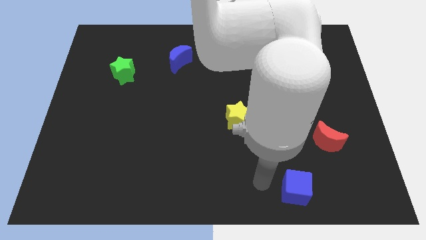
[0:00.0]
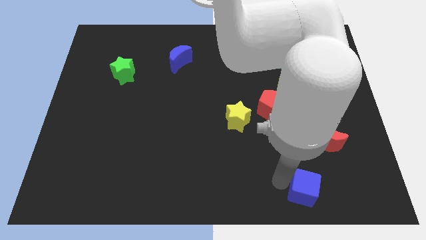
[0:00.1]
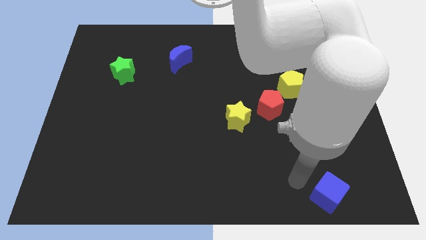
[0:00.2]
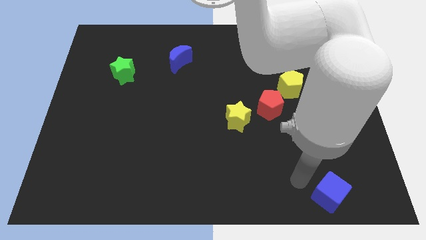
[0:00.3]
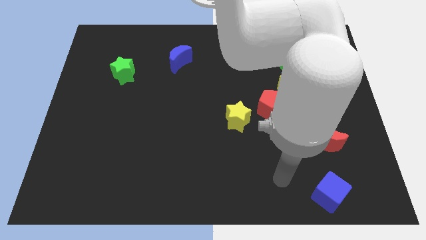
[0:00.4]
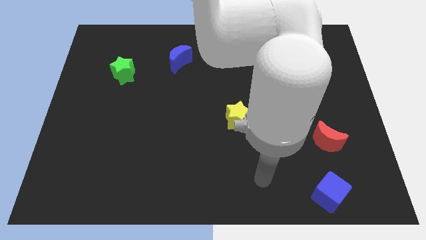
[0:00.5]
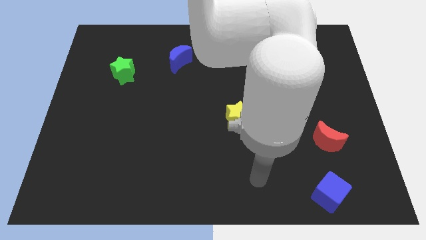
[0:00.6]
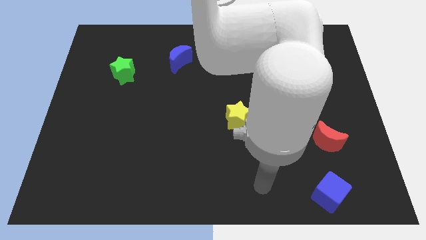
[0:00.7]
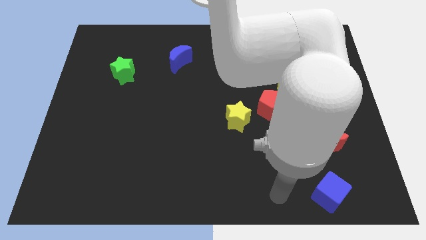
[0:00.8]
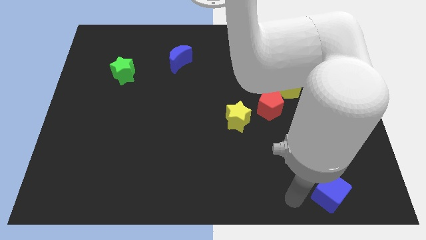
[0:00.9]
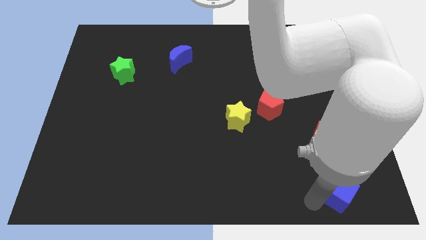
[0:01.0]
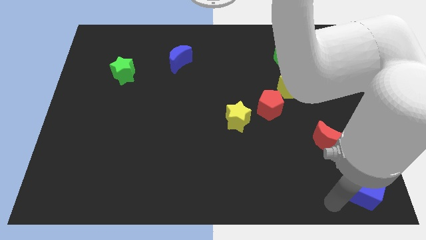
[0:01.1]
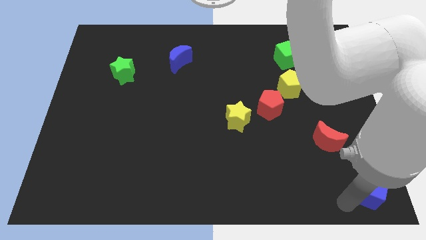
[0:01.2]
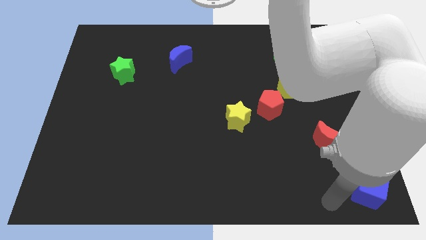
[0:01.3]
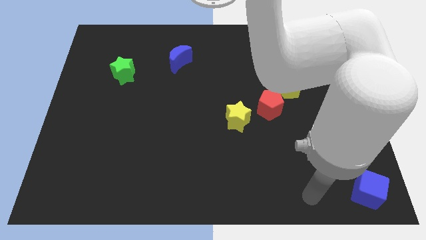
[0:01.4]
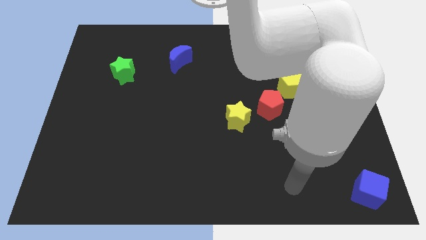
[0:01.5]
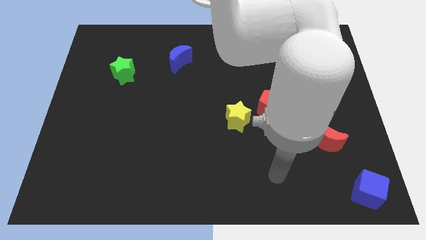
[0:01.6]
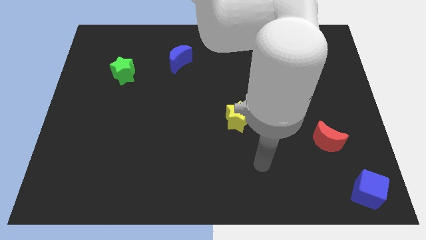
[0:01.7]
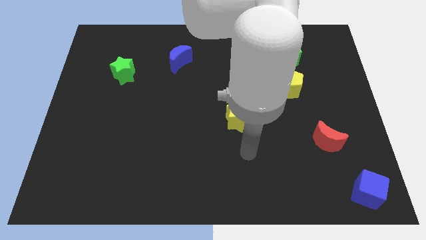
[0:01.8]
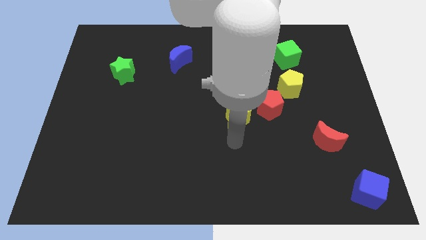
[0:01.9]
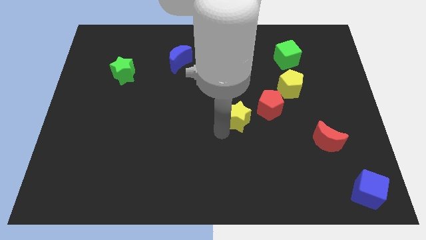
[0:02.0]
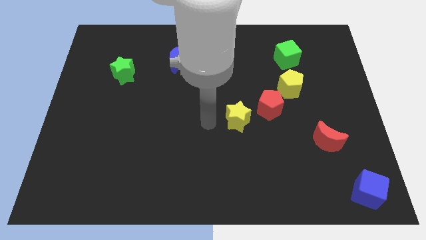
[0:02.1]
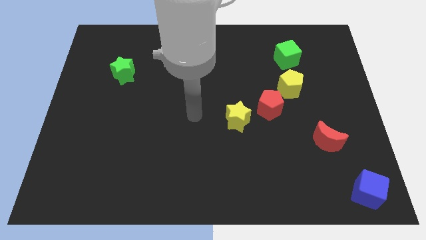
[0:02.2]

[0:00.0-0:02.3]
move the blue cube to the bottom right corner of the board

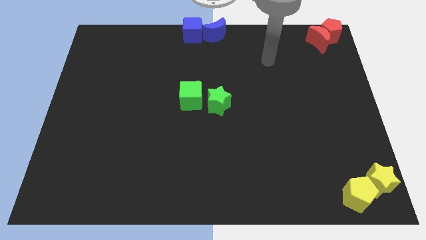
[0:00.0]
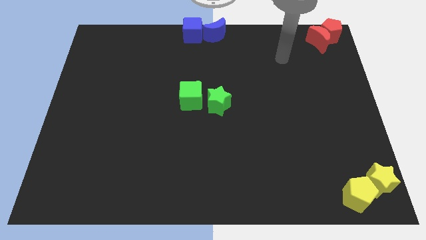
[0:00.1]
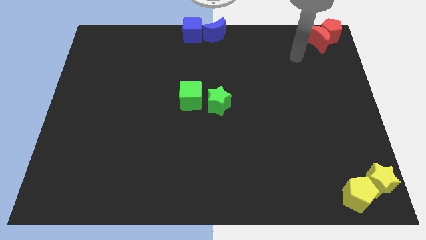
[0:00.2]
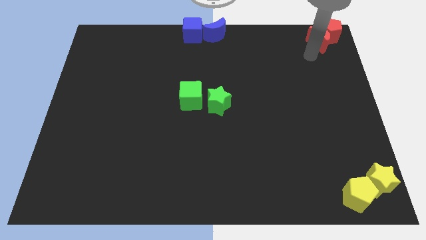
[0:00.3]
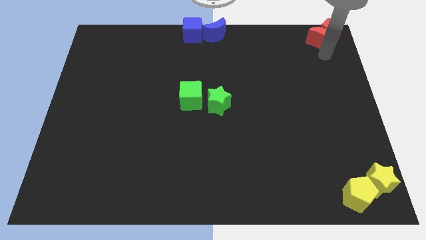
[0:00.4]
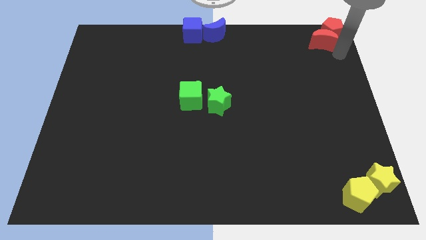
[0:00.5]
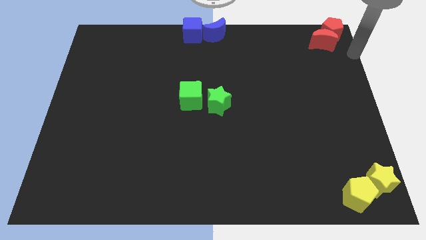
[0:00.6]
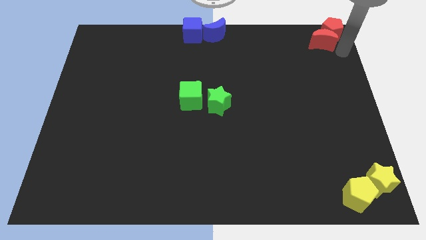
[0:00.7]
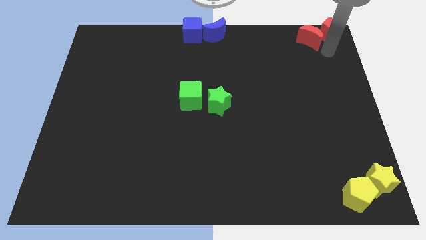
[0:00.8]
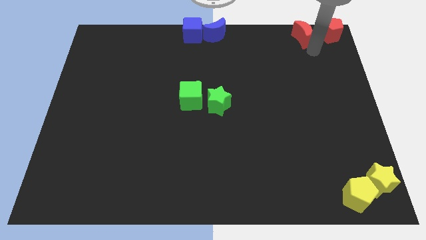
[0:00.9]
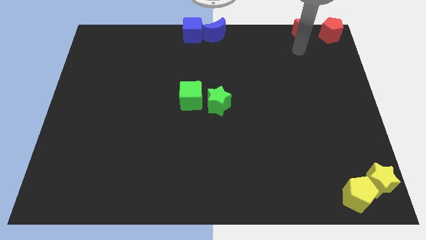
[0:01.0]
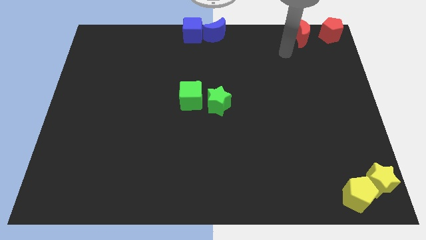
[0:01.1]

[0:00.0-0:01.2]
place red crescent beside red pentagon

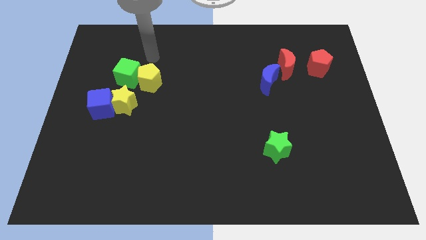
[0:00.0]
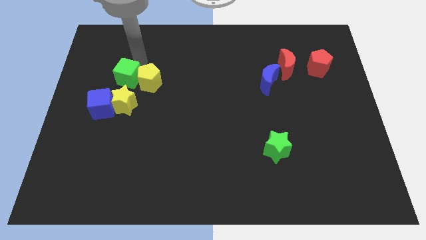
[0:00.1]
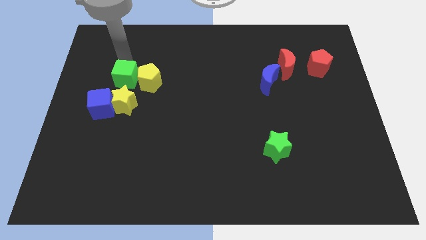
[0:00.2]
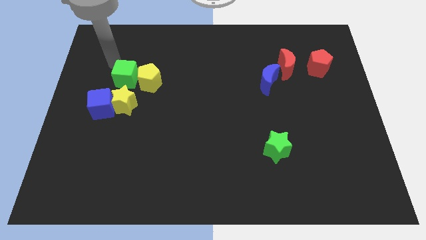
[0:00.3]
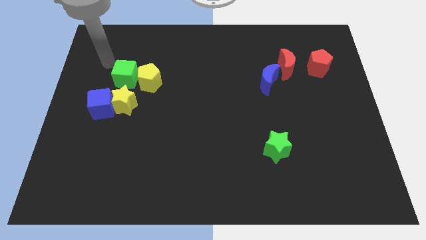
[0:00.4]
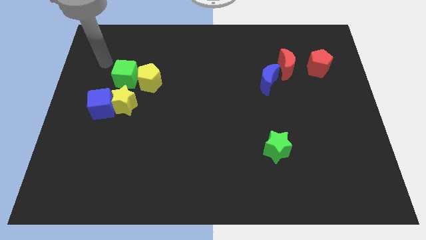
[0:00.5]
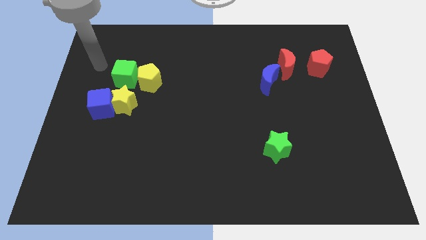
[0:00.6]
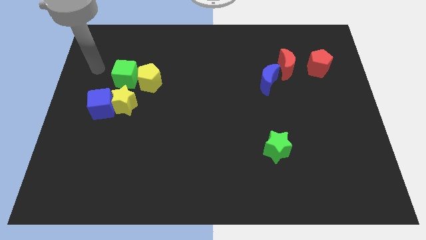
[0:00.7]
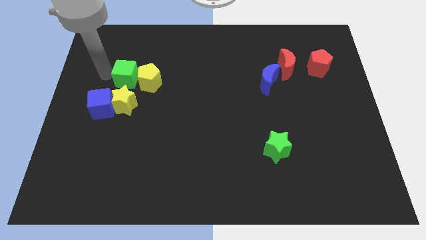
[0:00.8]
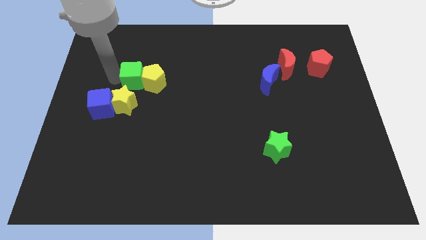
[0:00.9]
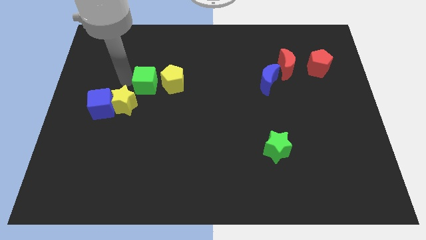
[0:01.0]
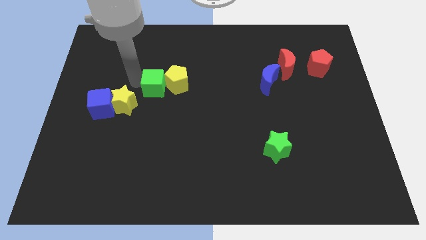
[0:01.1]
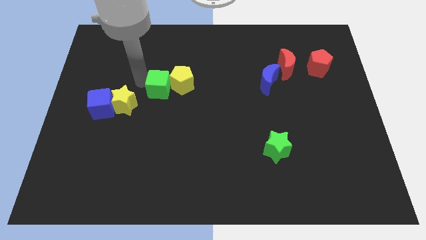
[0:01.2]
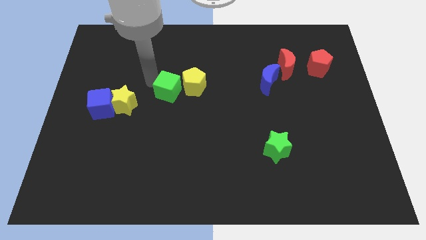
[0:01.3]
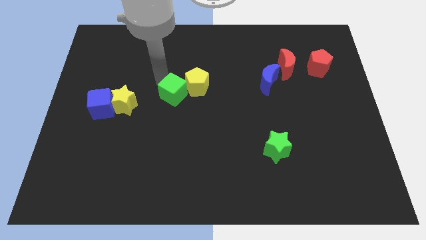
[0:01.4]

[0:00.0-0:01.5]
push the green cube and yellow pentagon towards the center of the board

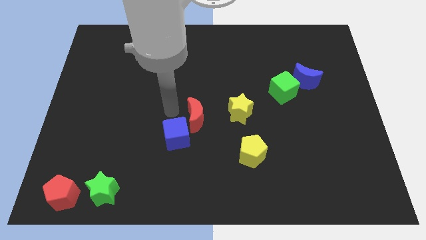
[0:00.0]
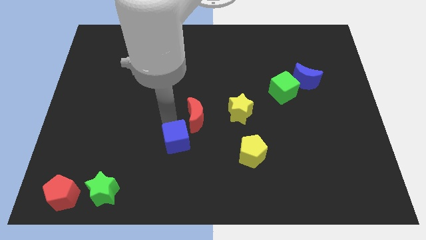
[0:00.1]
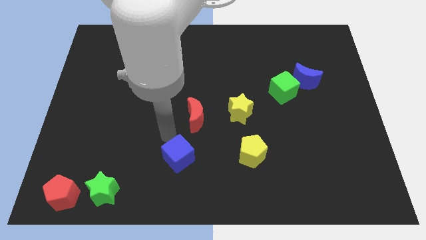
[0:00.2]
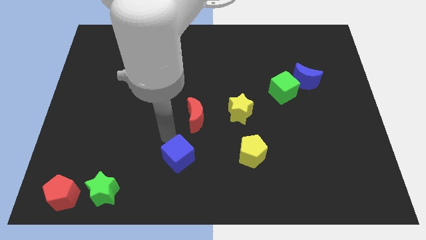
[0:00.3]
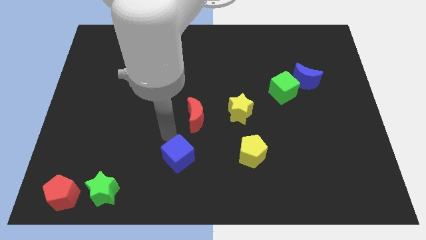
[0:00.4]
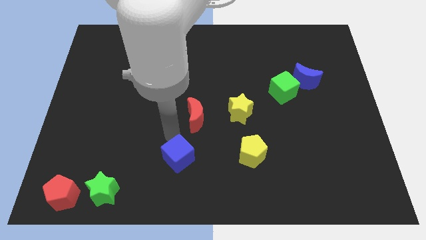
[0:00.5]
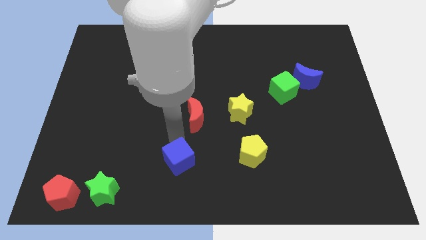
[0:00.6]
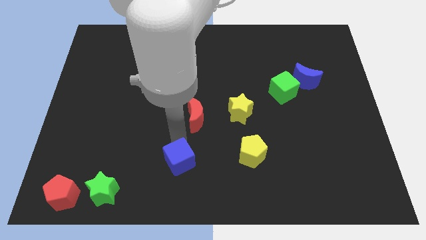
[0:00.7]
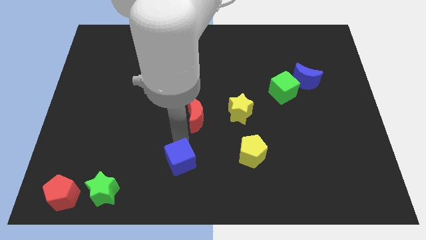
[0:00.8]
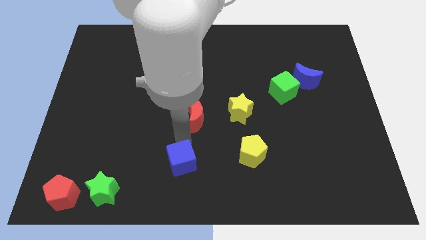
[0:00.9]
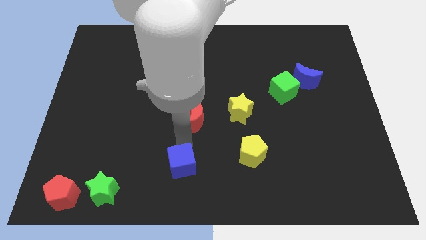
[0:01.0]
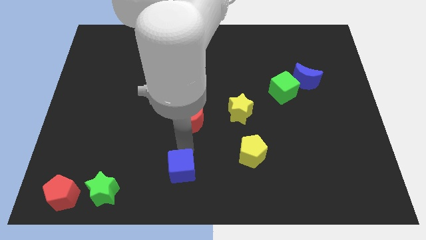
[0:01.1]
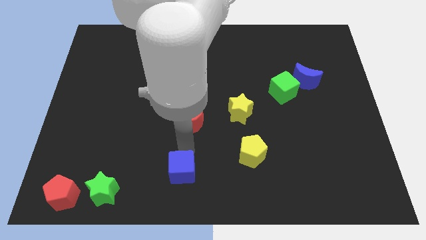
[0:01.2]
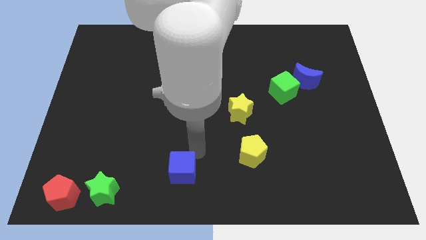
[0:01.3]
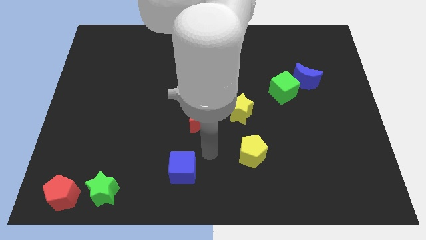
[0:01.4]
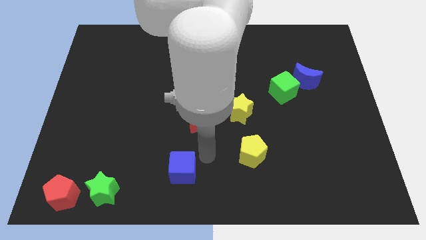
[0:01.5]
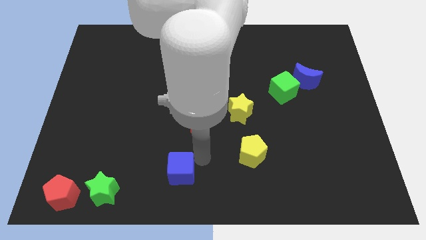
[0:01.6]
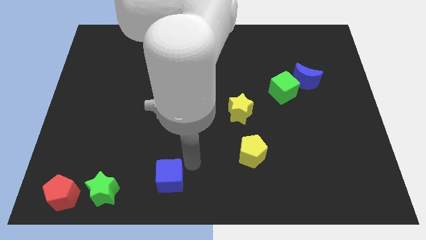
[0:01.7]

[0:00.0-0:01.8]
move the blue cube to the bottom left of the yellow pentagon

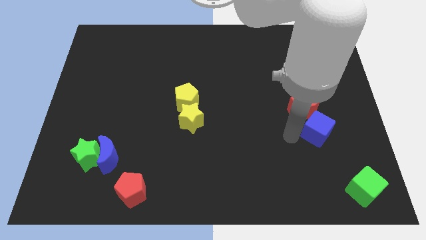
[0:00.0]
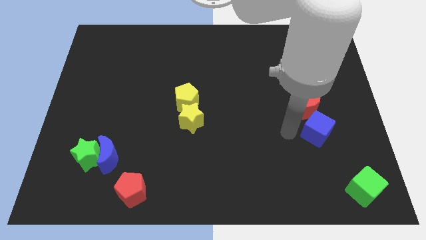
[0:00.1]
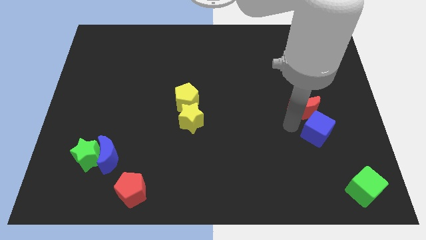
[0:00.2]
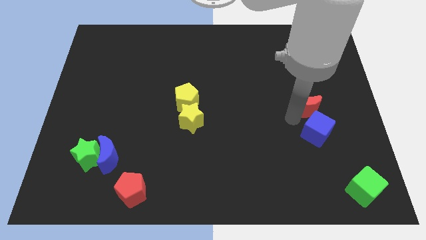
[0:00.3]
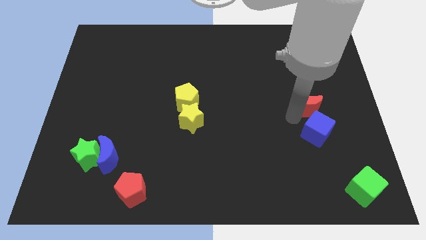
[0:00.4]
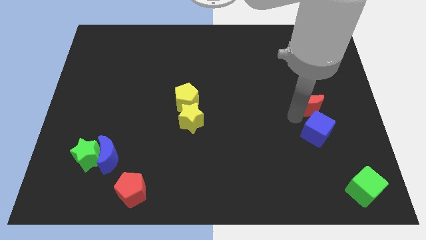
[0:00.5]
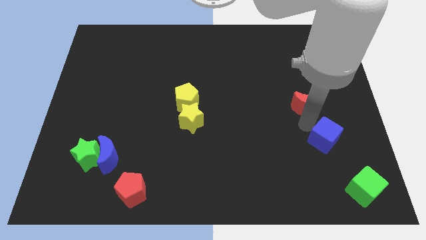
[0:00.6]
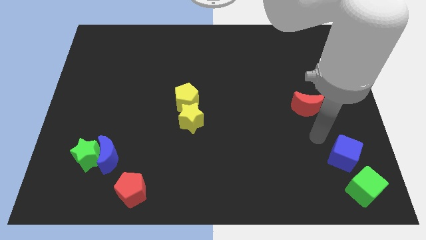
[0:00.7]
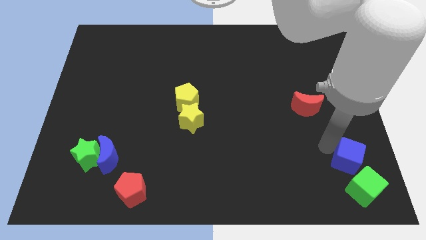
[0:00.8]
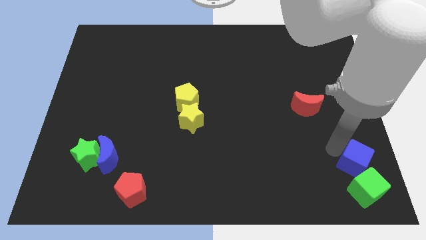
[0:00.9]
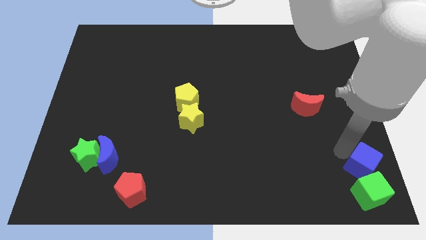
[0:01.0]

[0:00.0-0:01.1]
separate the red moon and blue cube

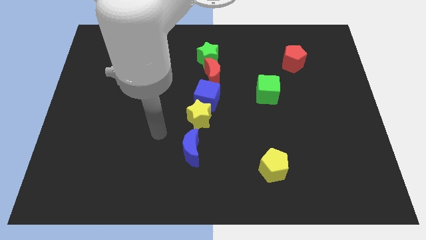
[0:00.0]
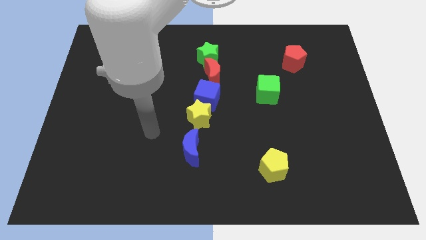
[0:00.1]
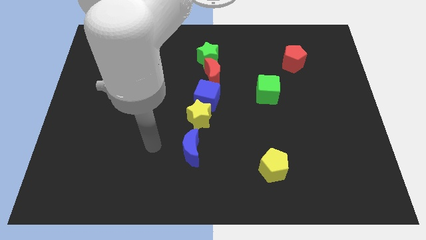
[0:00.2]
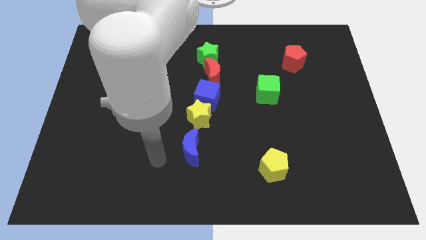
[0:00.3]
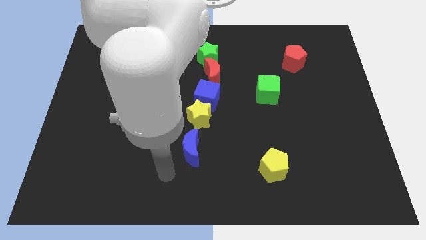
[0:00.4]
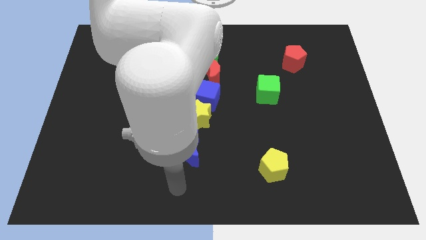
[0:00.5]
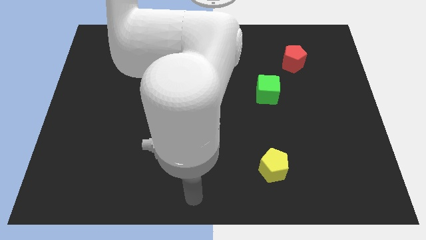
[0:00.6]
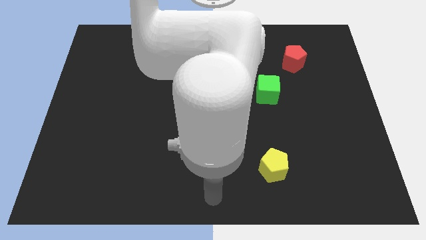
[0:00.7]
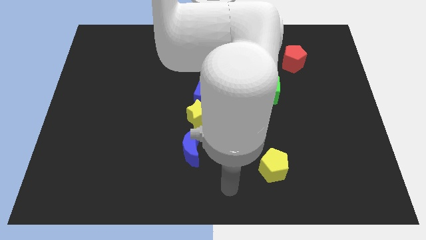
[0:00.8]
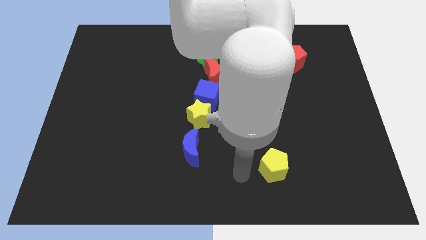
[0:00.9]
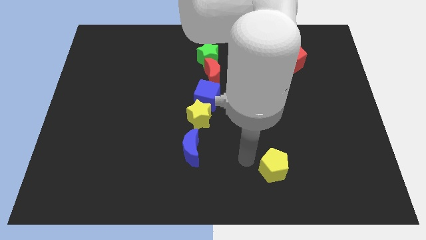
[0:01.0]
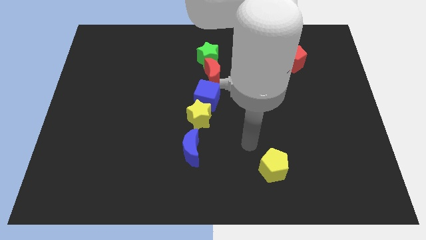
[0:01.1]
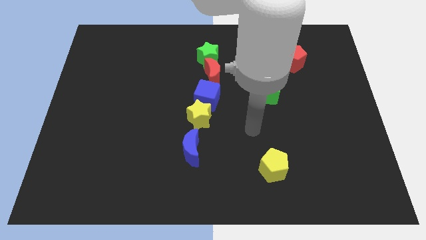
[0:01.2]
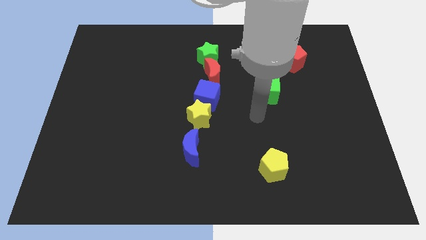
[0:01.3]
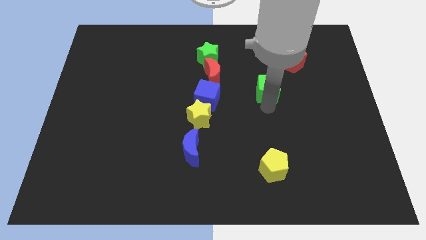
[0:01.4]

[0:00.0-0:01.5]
move your arm close to the green cube
